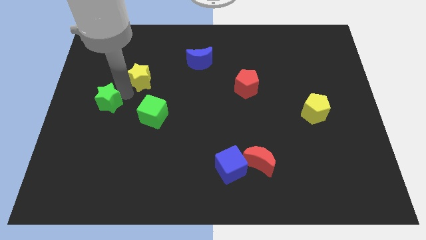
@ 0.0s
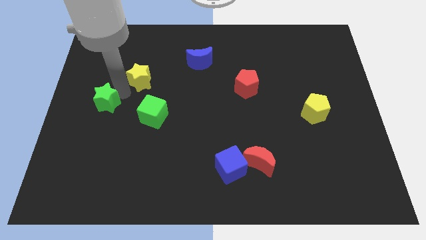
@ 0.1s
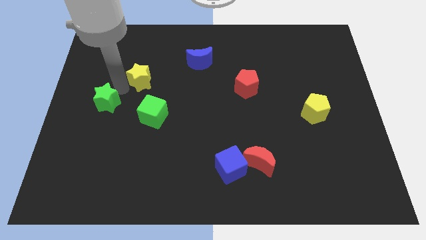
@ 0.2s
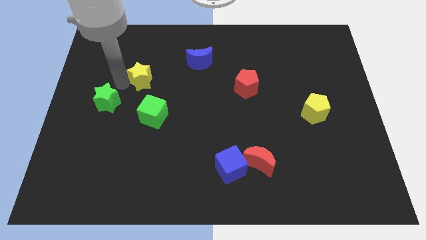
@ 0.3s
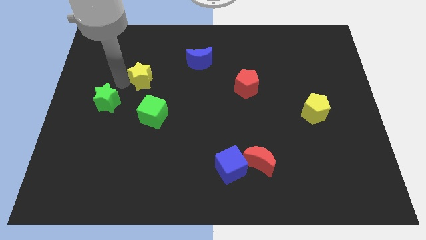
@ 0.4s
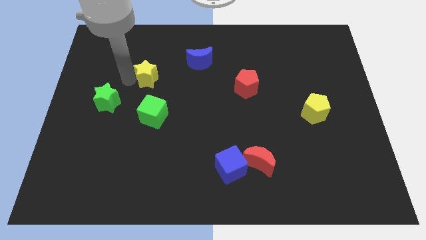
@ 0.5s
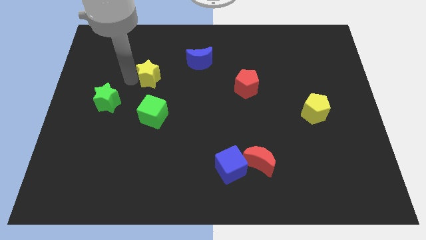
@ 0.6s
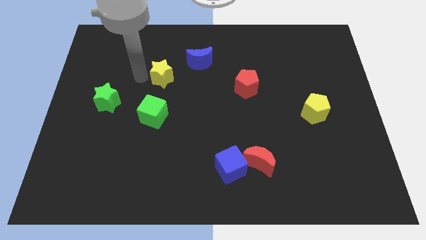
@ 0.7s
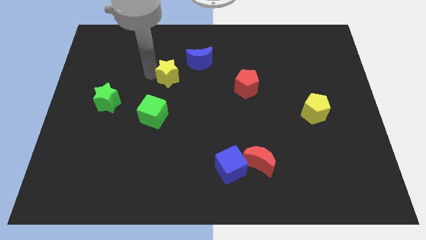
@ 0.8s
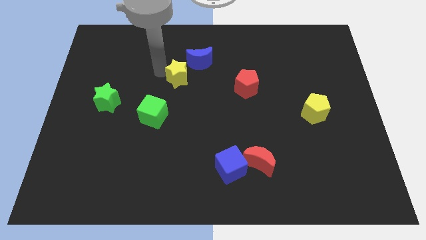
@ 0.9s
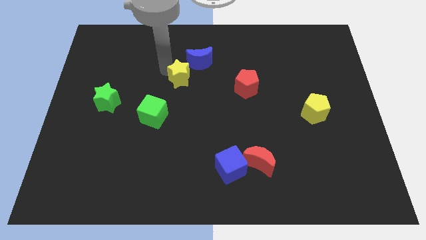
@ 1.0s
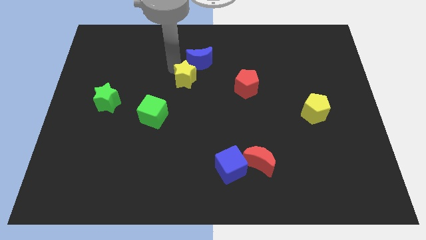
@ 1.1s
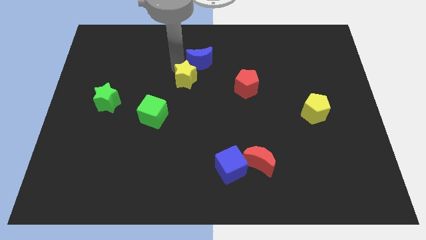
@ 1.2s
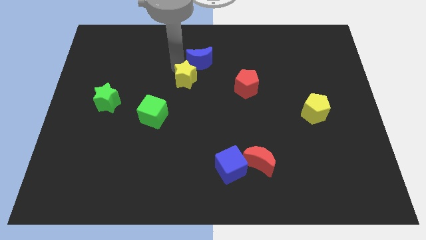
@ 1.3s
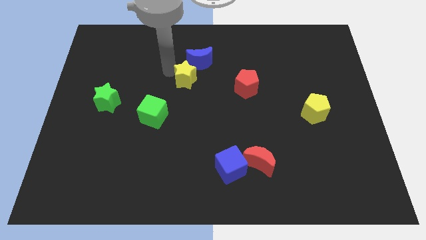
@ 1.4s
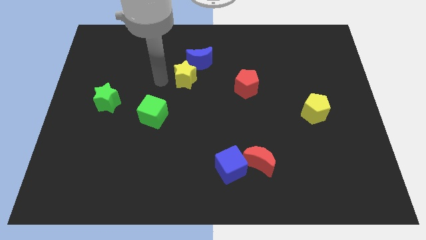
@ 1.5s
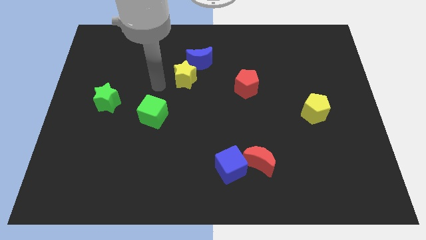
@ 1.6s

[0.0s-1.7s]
place yellow star below blue moon

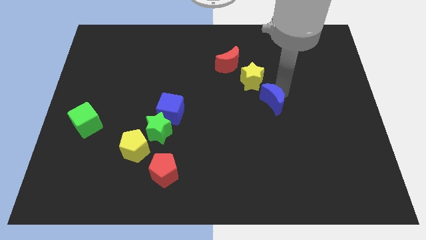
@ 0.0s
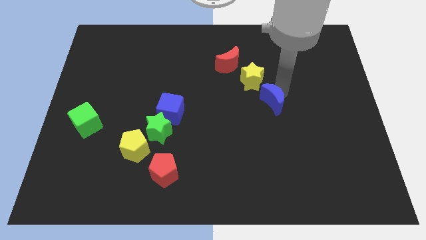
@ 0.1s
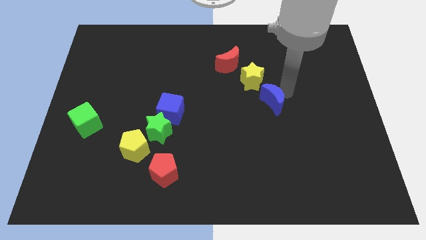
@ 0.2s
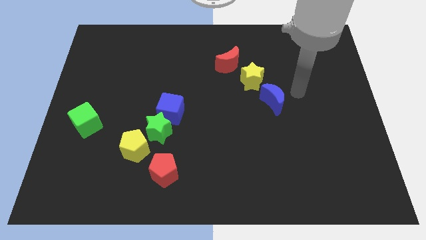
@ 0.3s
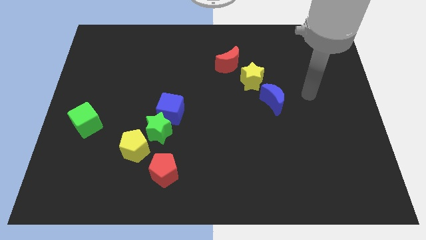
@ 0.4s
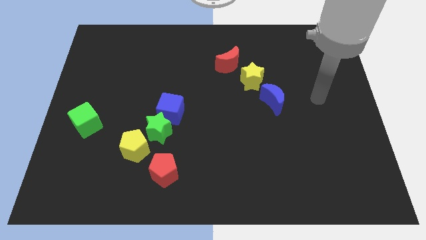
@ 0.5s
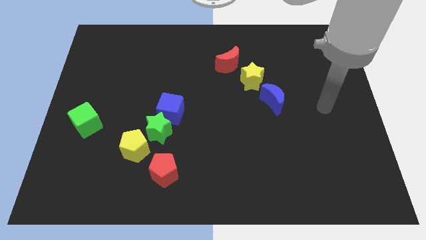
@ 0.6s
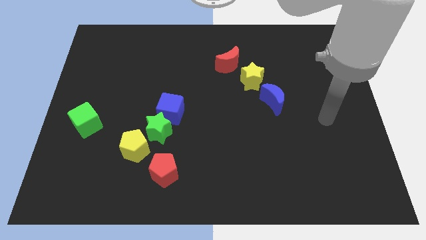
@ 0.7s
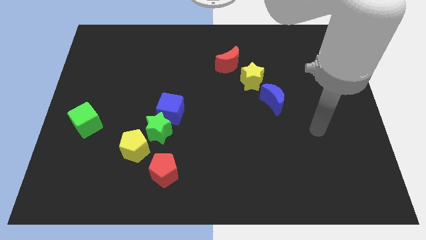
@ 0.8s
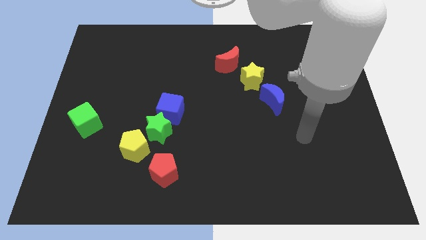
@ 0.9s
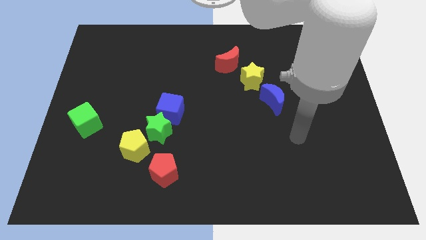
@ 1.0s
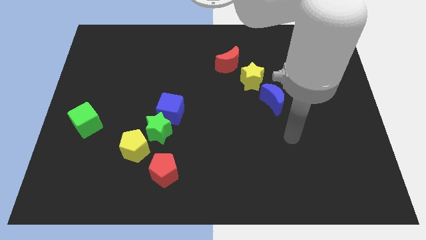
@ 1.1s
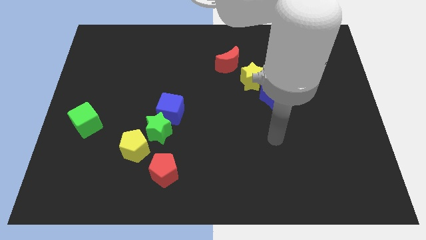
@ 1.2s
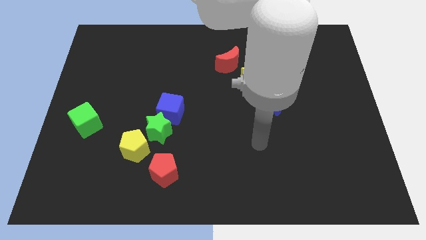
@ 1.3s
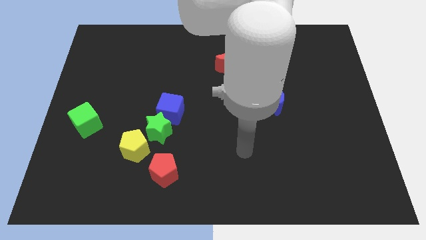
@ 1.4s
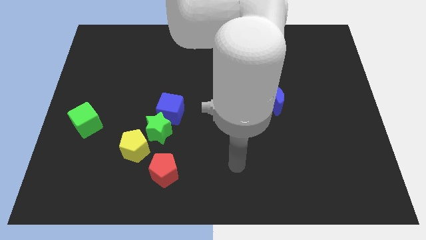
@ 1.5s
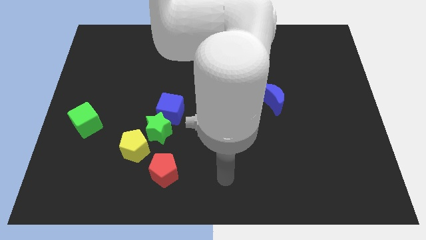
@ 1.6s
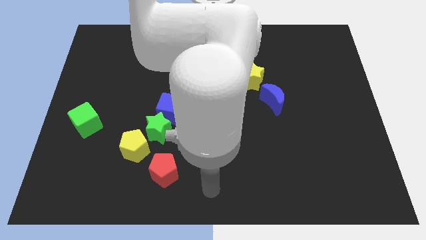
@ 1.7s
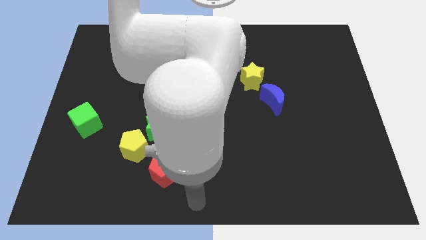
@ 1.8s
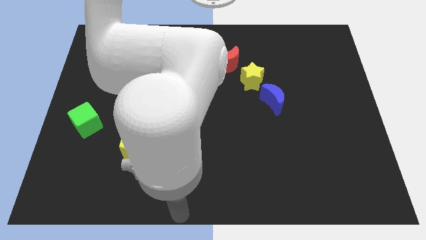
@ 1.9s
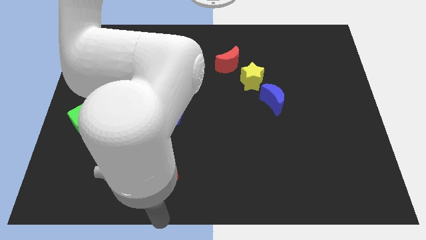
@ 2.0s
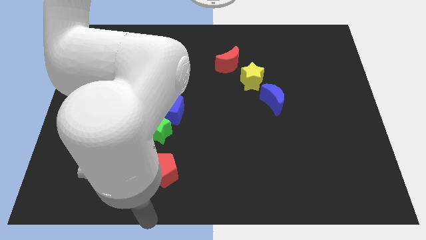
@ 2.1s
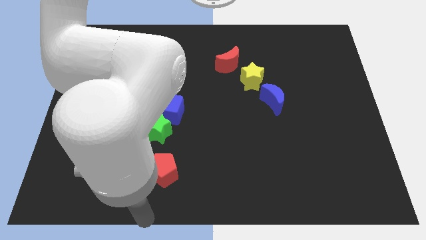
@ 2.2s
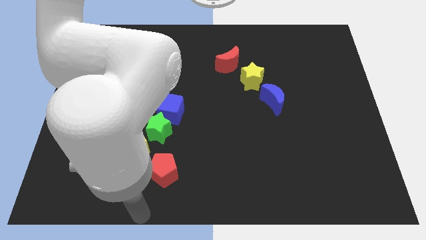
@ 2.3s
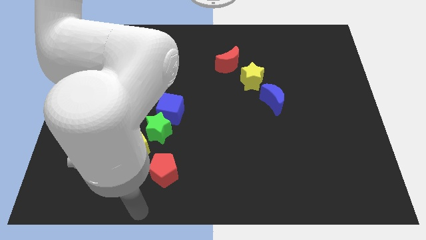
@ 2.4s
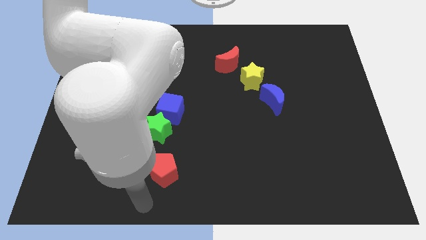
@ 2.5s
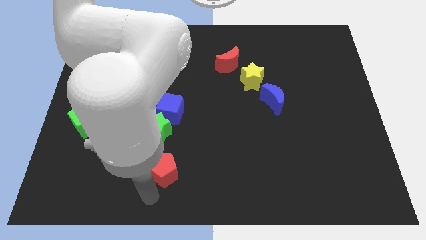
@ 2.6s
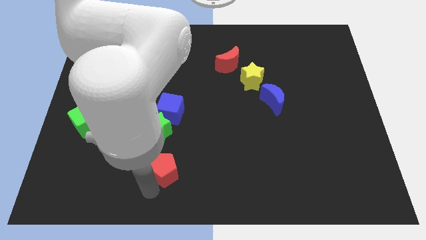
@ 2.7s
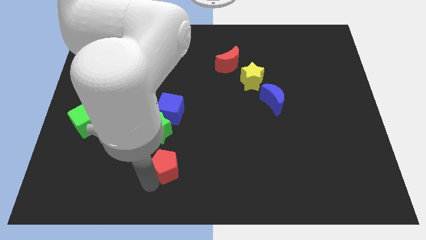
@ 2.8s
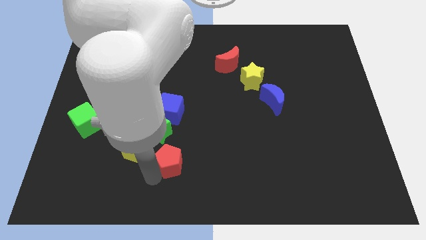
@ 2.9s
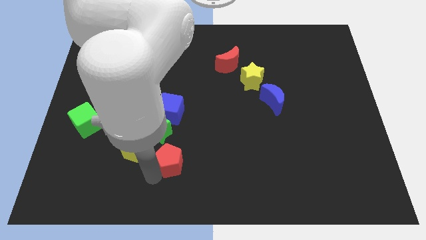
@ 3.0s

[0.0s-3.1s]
touch the bottom of red pentagon

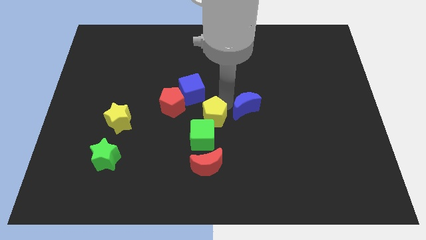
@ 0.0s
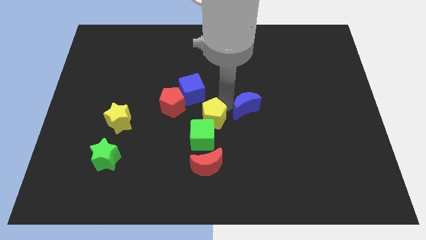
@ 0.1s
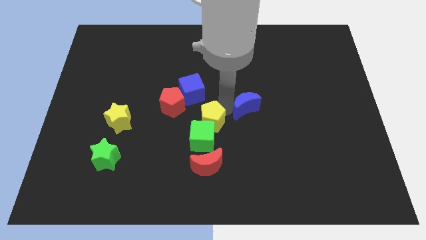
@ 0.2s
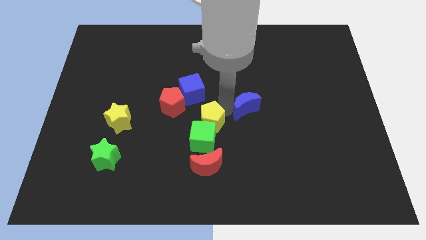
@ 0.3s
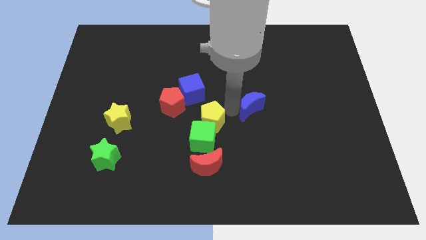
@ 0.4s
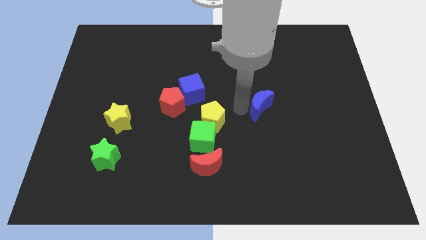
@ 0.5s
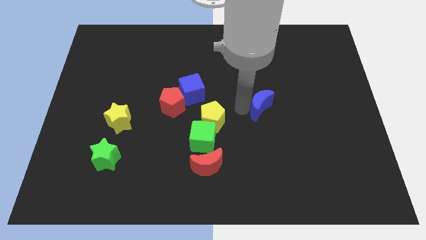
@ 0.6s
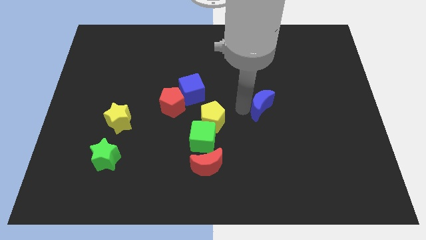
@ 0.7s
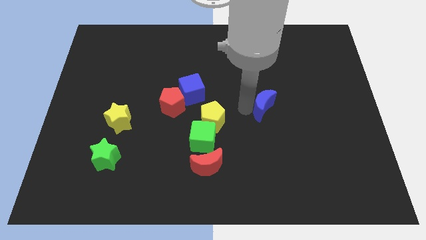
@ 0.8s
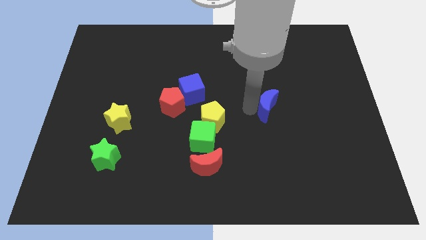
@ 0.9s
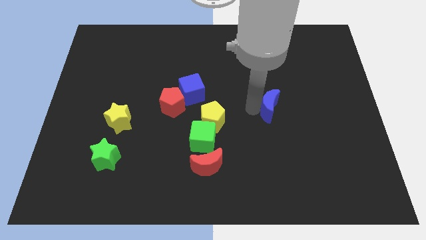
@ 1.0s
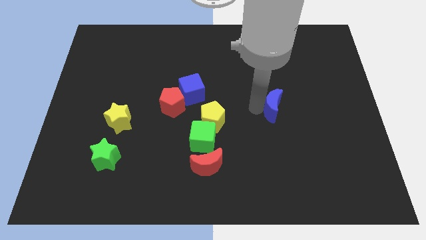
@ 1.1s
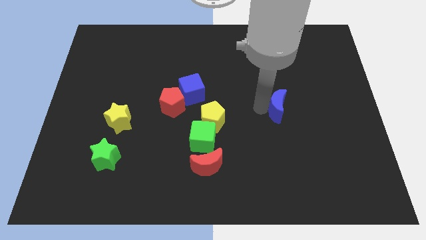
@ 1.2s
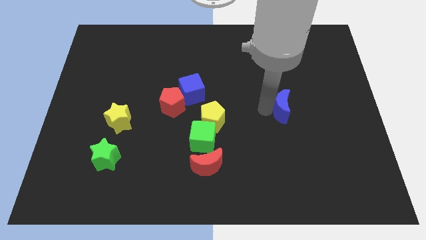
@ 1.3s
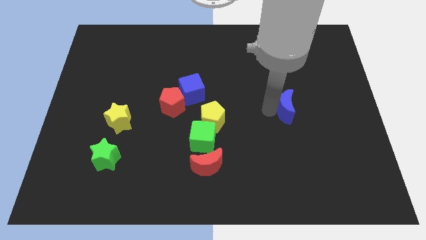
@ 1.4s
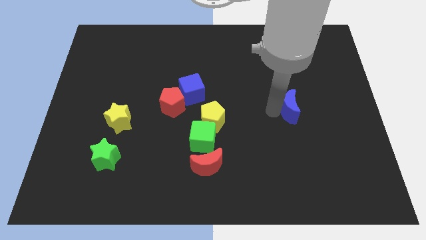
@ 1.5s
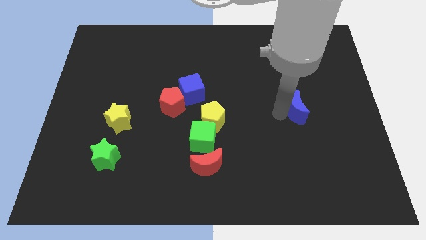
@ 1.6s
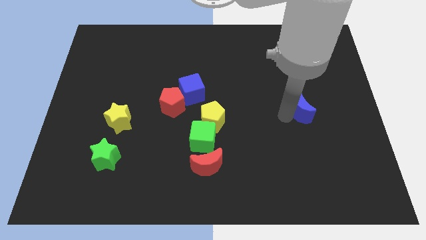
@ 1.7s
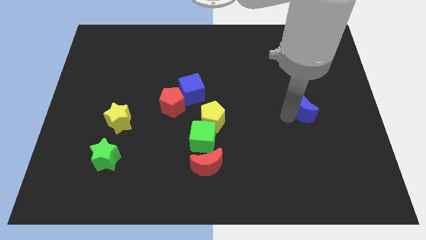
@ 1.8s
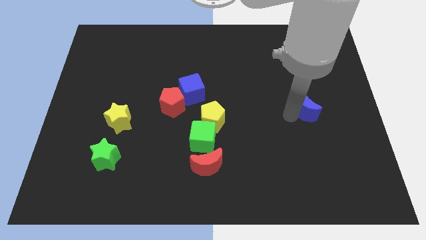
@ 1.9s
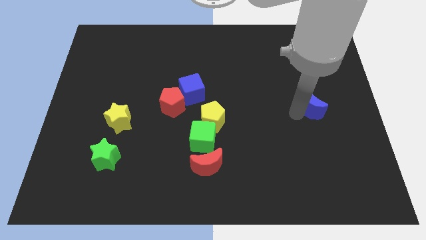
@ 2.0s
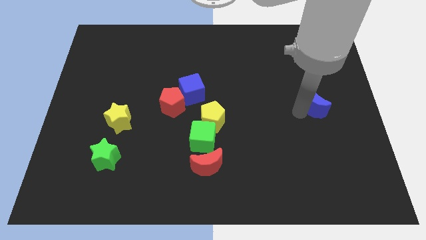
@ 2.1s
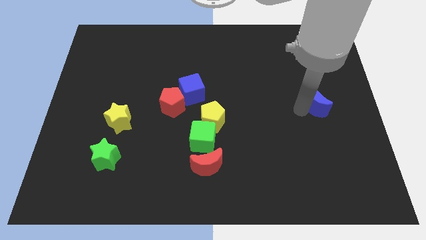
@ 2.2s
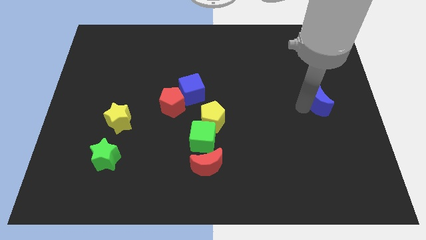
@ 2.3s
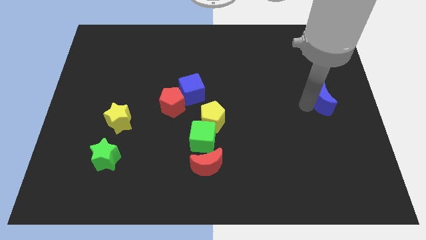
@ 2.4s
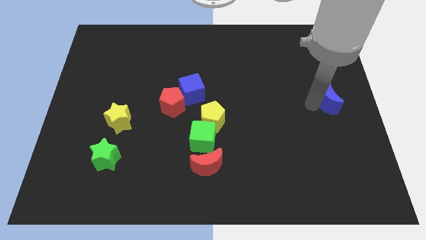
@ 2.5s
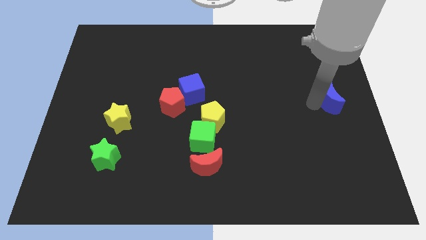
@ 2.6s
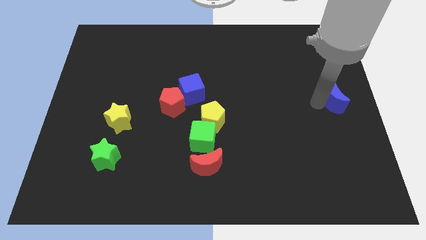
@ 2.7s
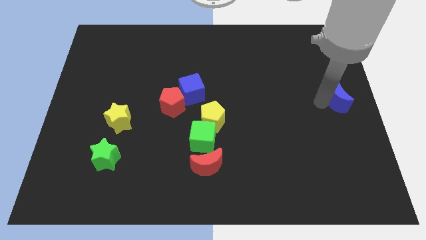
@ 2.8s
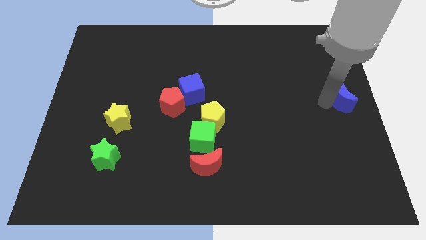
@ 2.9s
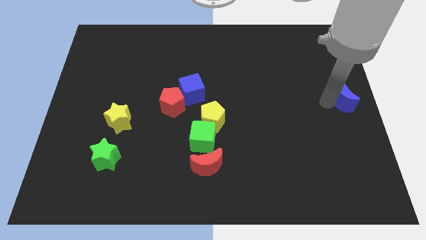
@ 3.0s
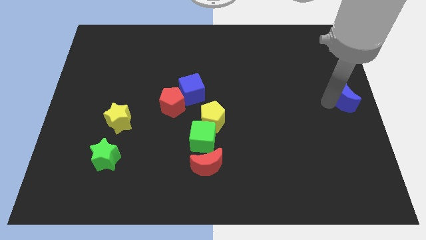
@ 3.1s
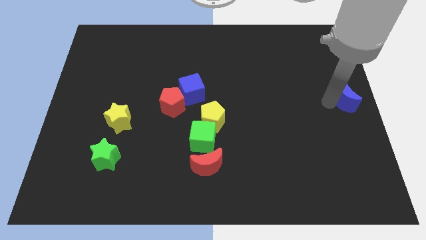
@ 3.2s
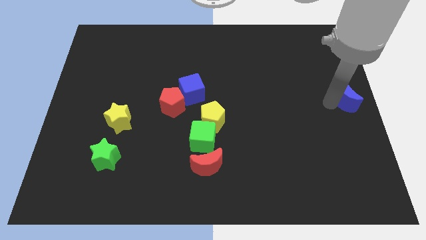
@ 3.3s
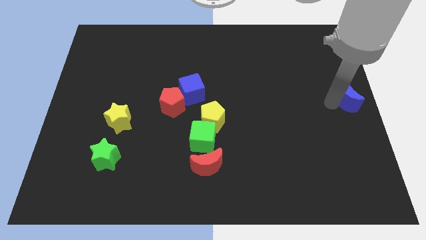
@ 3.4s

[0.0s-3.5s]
separate the blue moon from the yellow pentagon

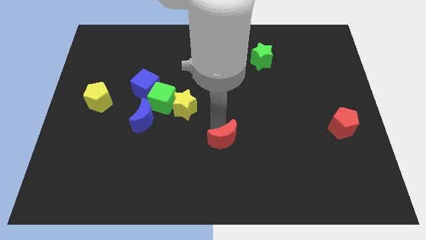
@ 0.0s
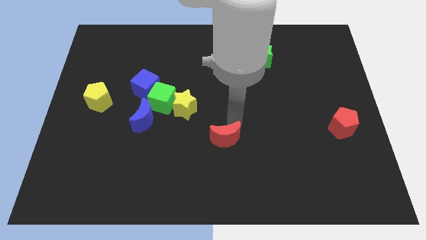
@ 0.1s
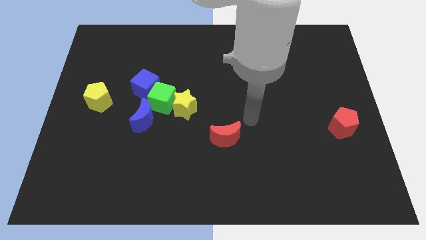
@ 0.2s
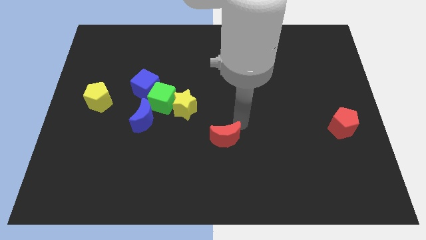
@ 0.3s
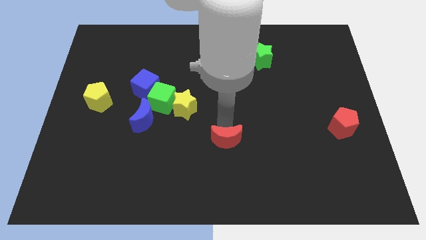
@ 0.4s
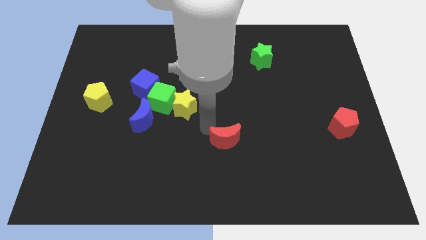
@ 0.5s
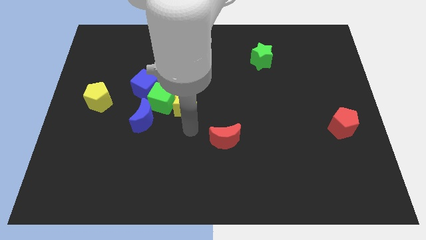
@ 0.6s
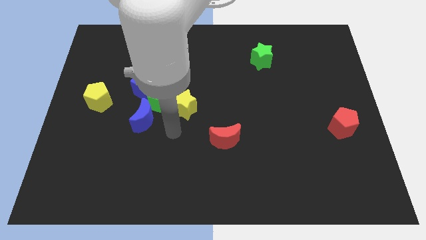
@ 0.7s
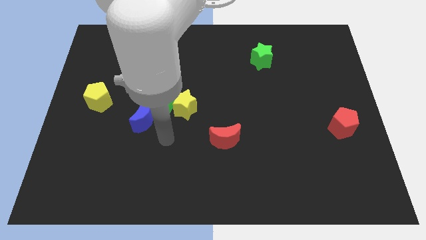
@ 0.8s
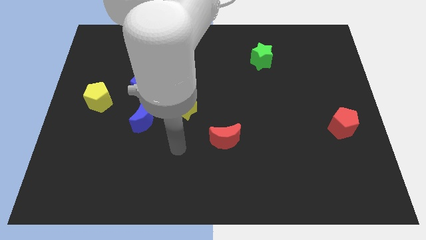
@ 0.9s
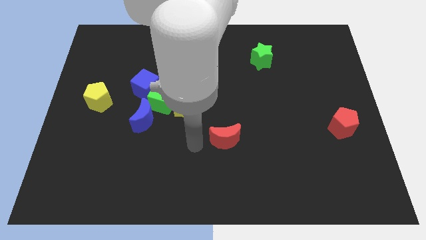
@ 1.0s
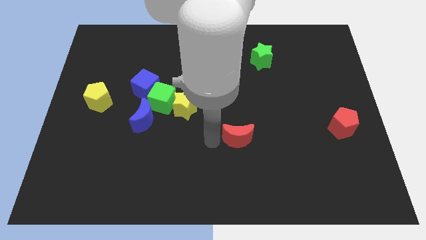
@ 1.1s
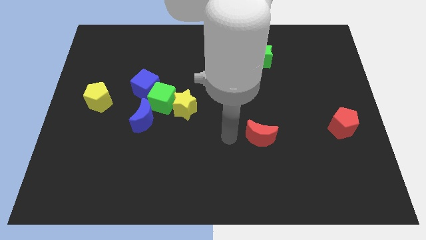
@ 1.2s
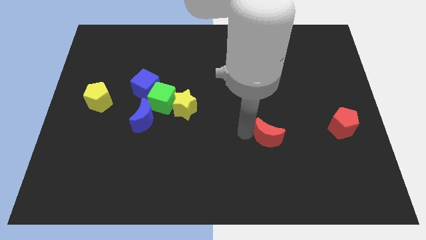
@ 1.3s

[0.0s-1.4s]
push red crescent below green star
